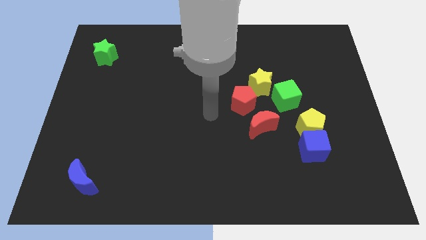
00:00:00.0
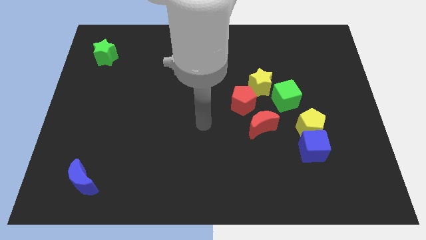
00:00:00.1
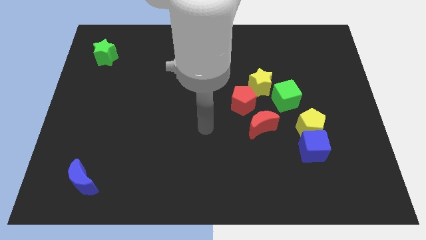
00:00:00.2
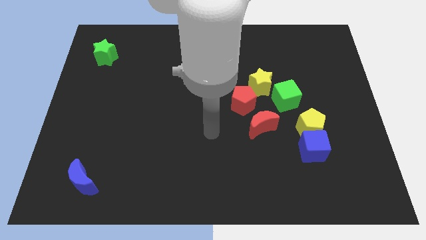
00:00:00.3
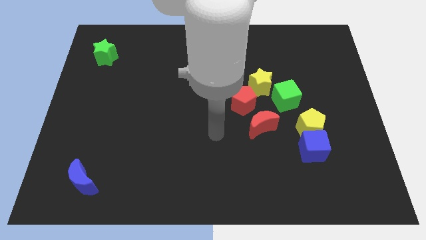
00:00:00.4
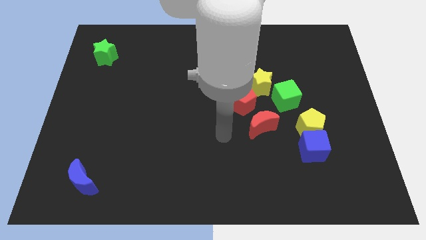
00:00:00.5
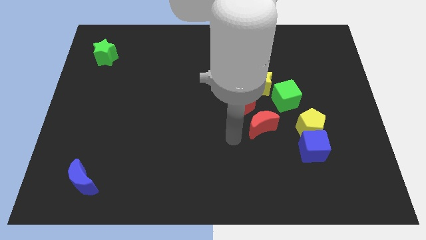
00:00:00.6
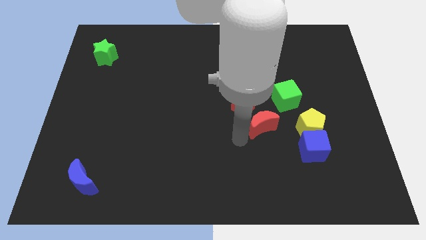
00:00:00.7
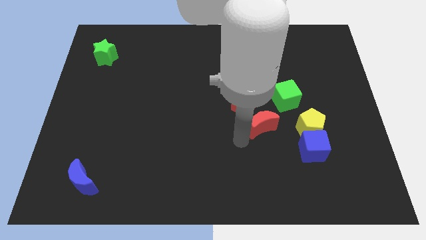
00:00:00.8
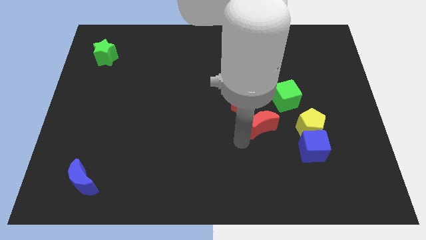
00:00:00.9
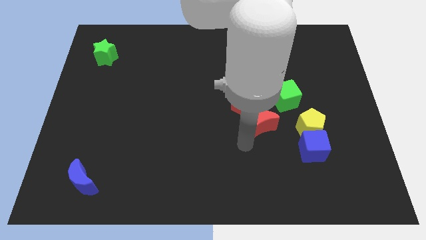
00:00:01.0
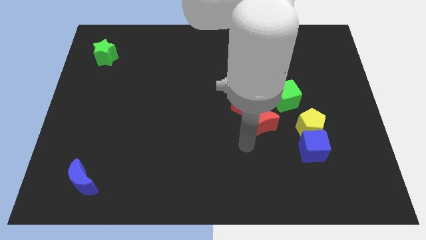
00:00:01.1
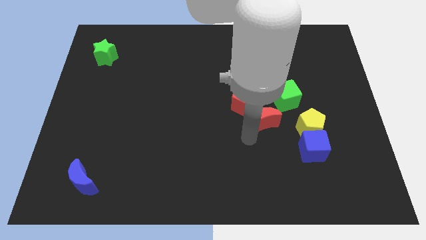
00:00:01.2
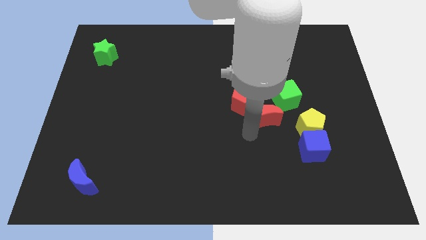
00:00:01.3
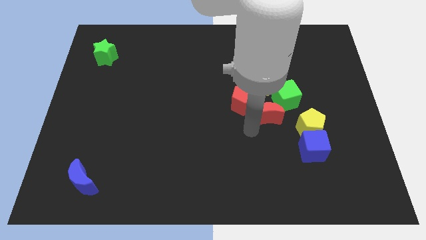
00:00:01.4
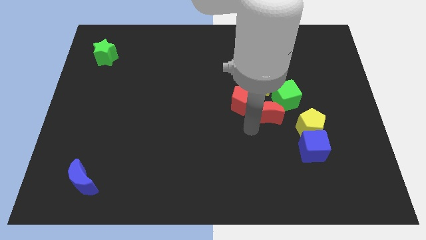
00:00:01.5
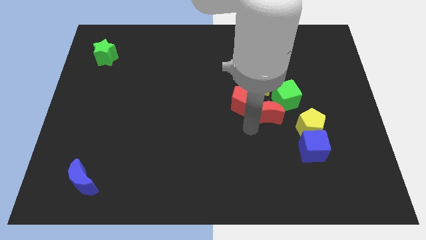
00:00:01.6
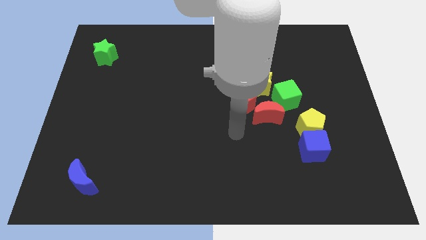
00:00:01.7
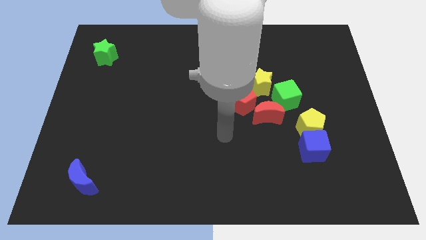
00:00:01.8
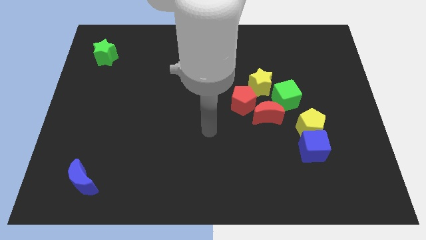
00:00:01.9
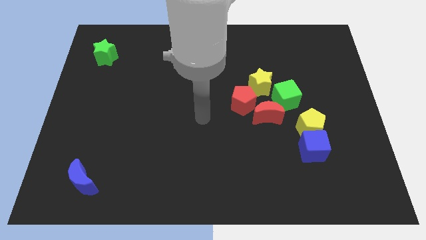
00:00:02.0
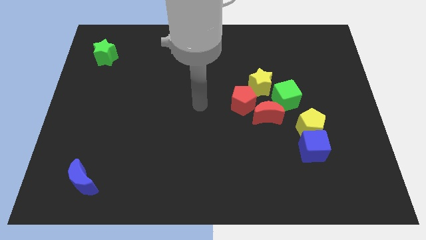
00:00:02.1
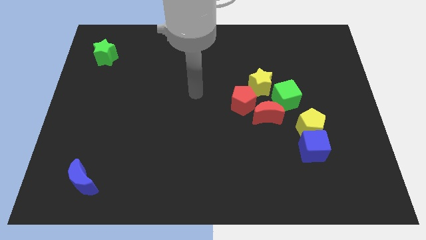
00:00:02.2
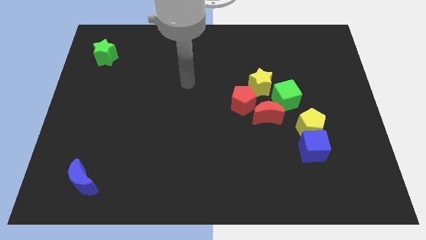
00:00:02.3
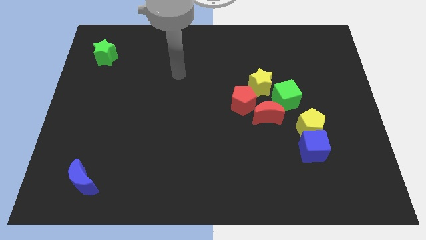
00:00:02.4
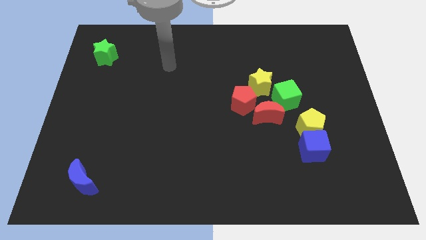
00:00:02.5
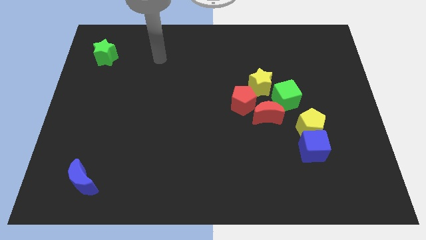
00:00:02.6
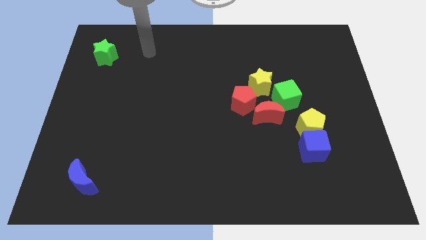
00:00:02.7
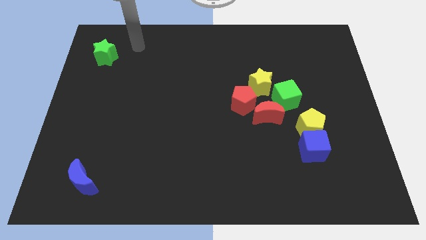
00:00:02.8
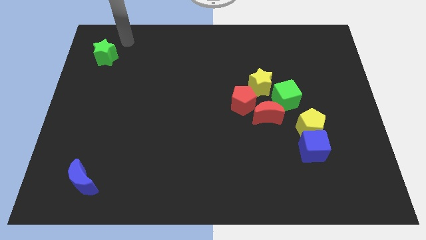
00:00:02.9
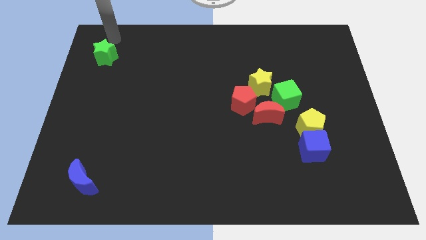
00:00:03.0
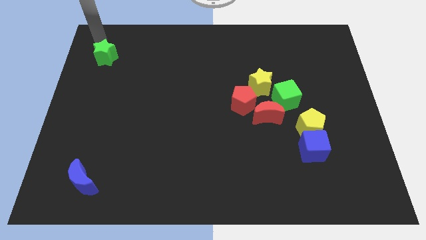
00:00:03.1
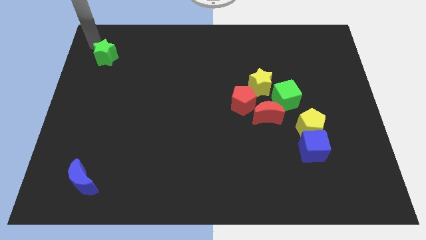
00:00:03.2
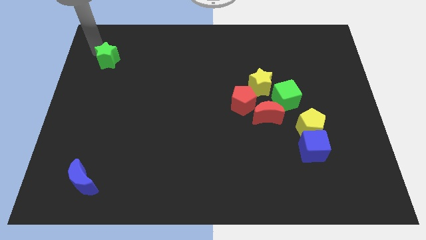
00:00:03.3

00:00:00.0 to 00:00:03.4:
adjust the green star

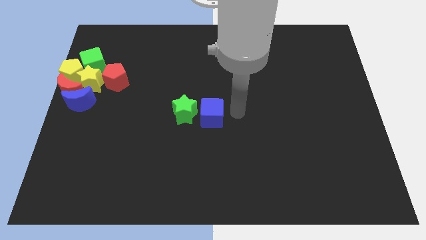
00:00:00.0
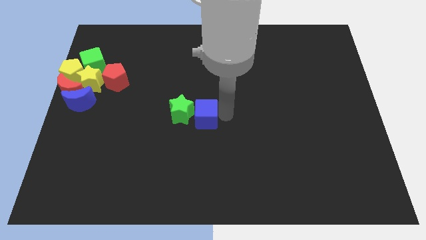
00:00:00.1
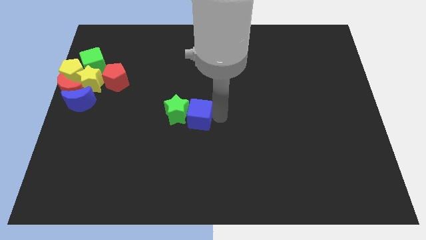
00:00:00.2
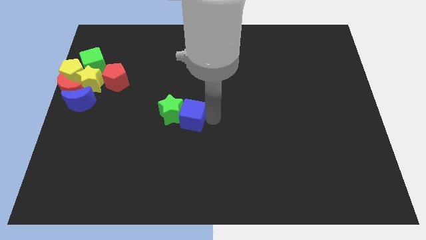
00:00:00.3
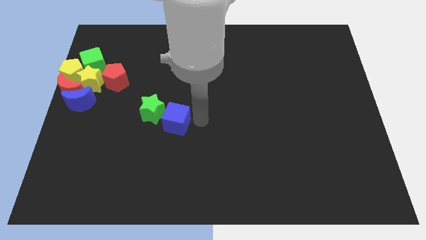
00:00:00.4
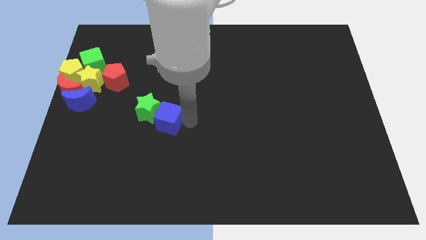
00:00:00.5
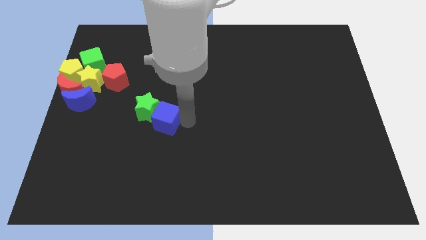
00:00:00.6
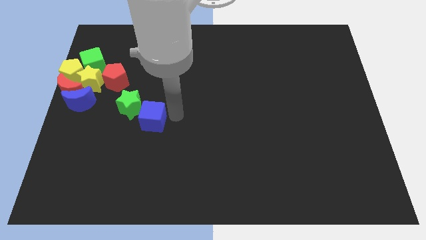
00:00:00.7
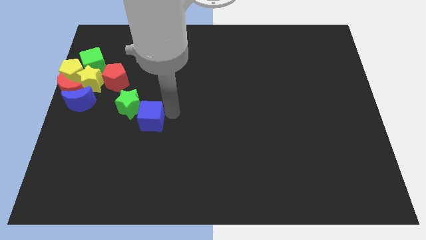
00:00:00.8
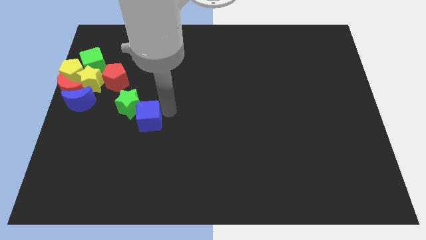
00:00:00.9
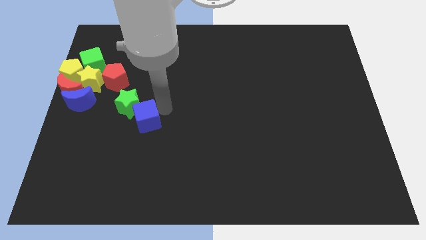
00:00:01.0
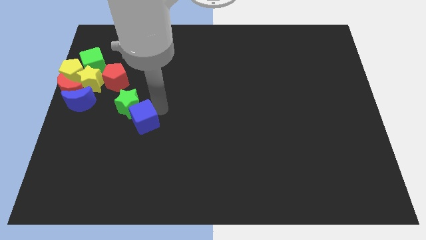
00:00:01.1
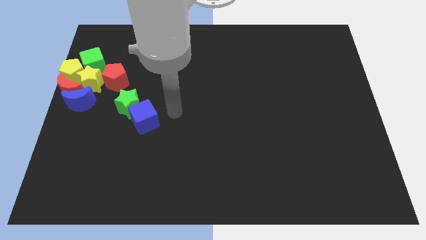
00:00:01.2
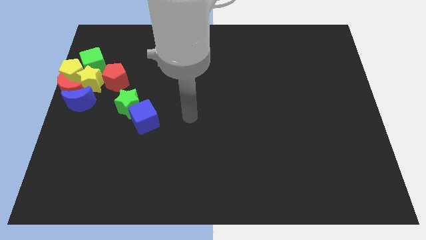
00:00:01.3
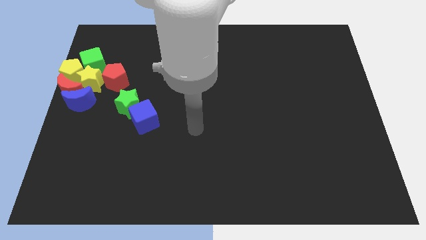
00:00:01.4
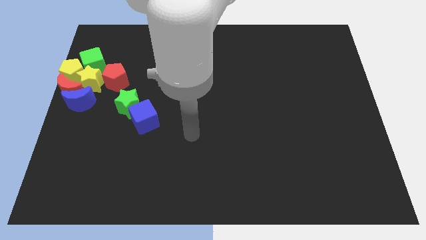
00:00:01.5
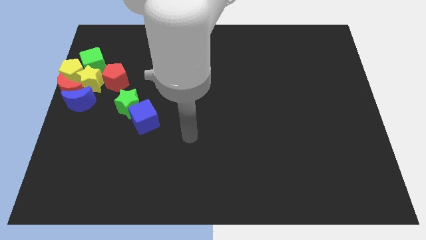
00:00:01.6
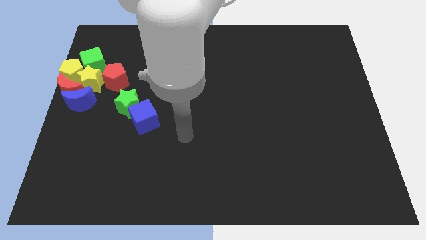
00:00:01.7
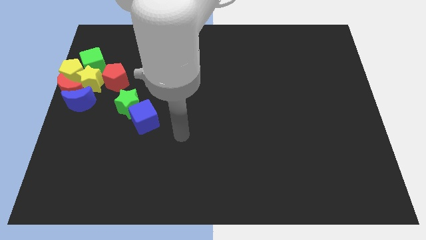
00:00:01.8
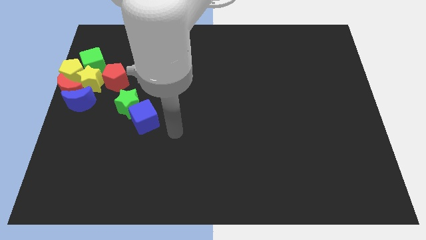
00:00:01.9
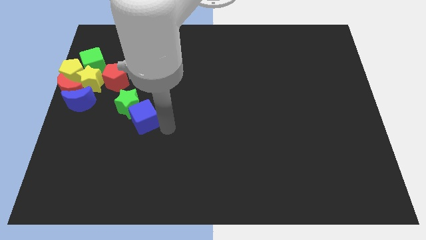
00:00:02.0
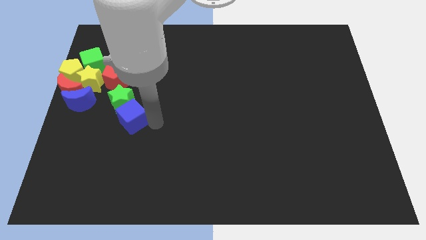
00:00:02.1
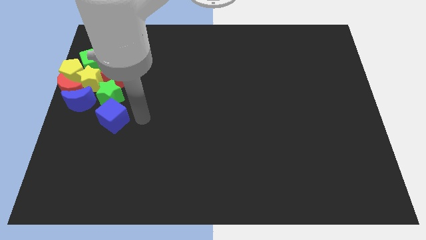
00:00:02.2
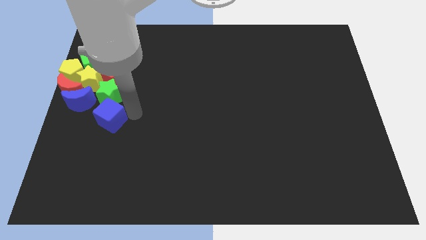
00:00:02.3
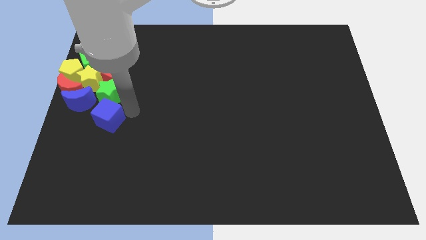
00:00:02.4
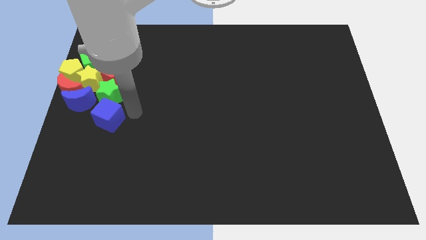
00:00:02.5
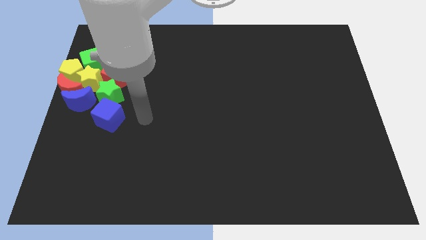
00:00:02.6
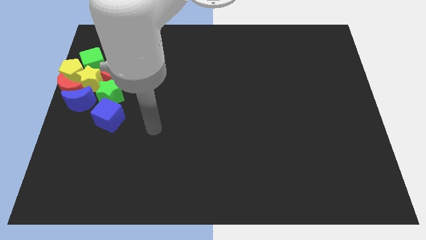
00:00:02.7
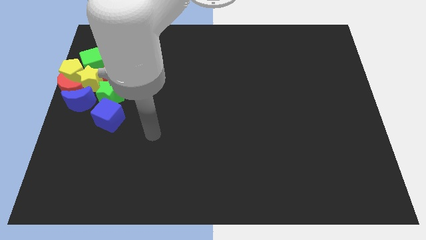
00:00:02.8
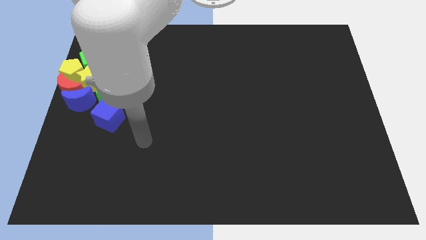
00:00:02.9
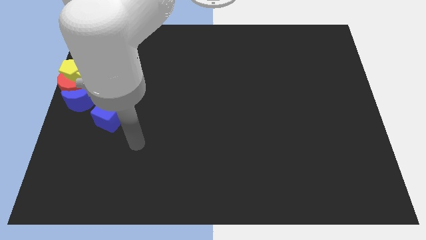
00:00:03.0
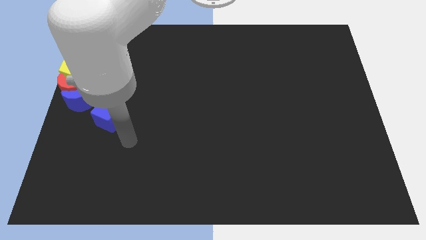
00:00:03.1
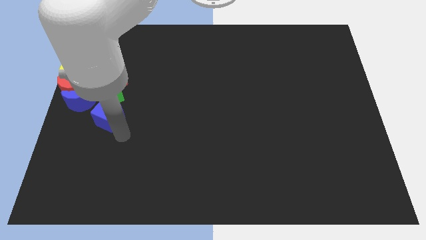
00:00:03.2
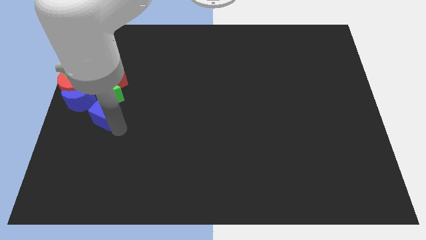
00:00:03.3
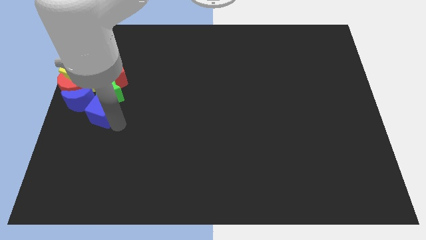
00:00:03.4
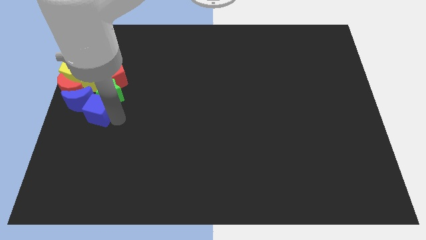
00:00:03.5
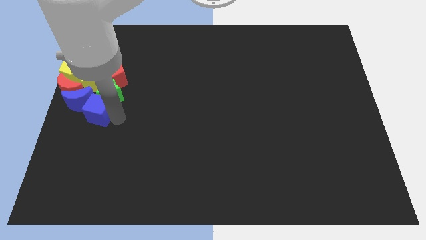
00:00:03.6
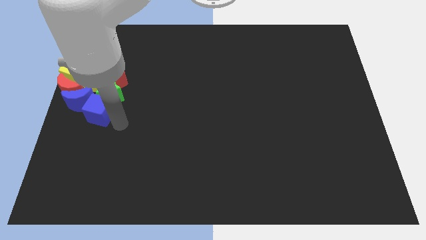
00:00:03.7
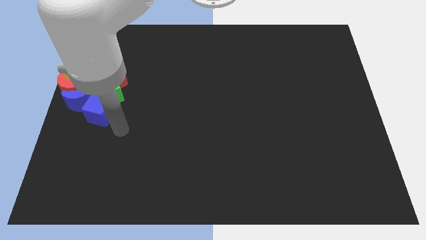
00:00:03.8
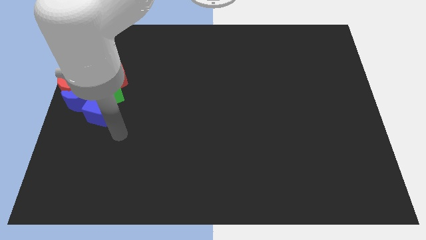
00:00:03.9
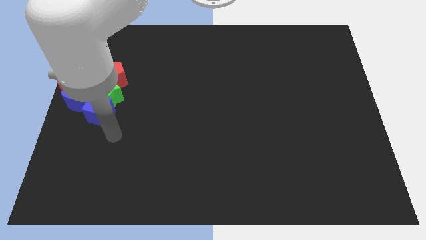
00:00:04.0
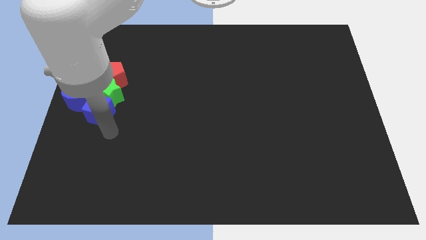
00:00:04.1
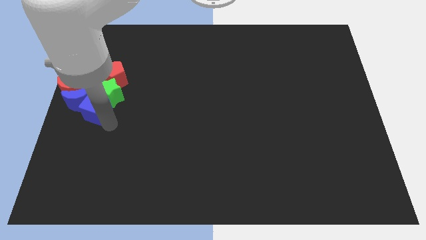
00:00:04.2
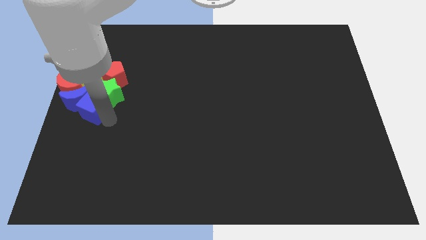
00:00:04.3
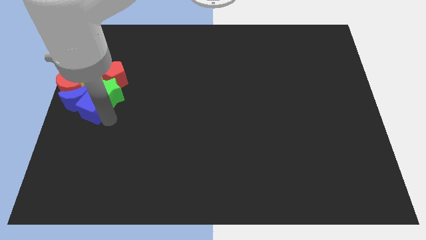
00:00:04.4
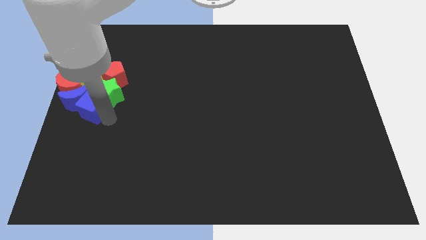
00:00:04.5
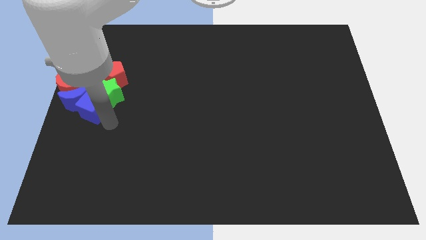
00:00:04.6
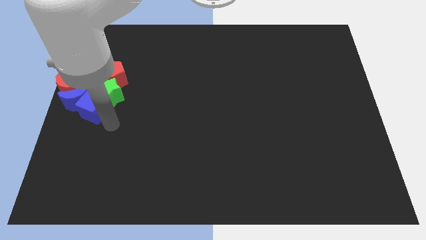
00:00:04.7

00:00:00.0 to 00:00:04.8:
push the blue cube into blue moon

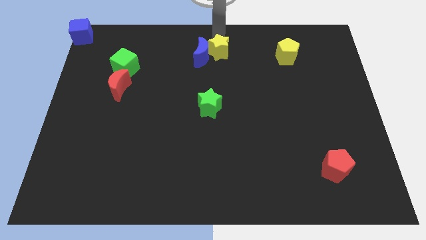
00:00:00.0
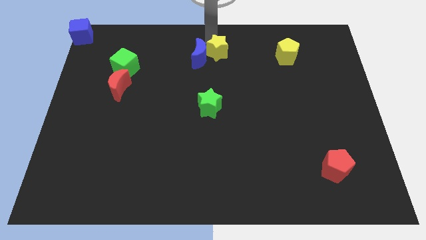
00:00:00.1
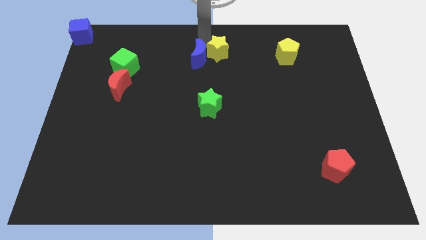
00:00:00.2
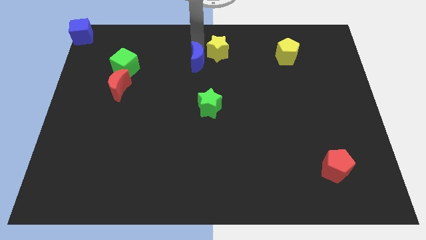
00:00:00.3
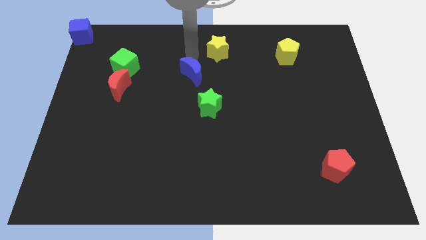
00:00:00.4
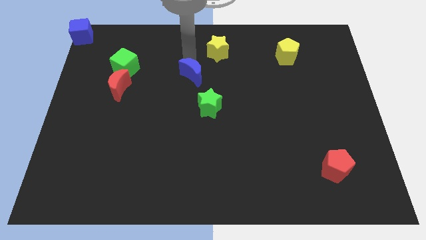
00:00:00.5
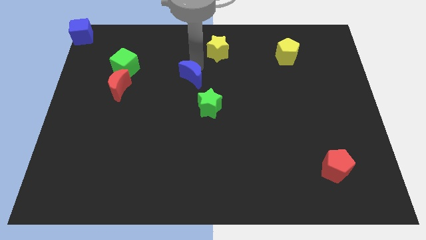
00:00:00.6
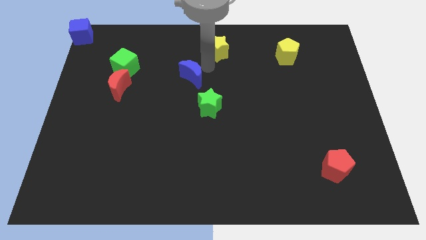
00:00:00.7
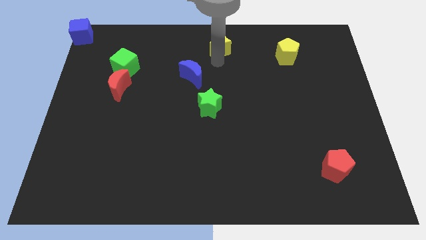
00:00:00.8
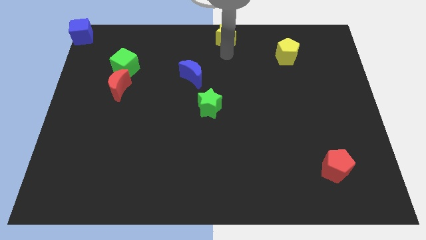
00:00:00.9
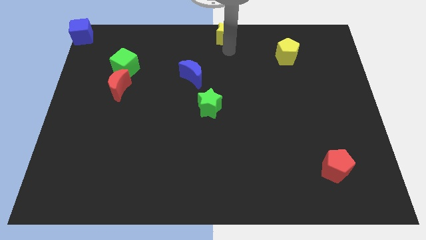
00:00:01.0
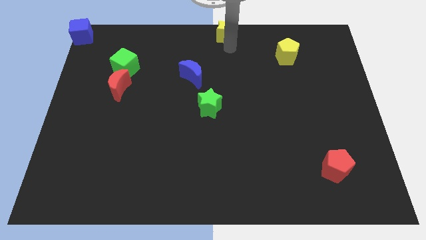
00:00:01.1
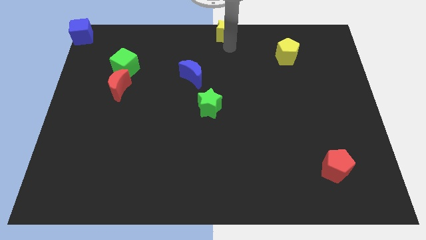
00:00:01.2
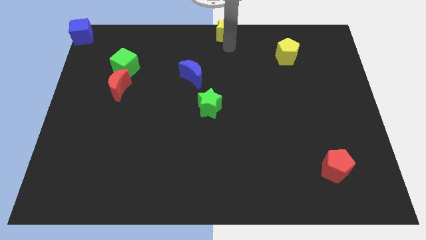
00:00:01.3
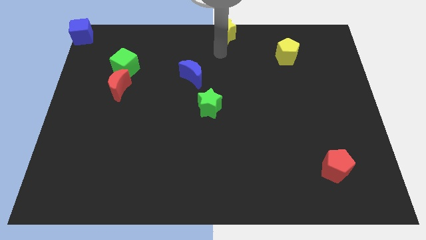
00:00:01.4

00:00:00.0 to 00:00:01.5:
place yellow star towards top middle end of the board
